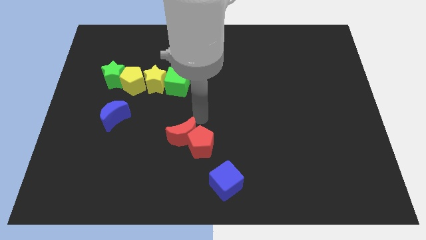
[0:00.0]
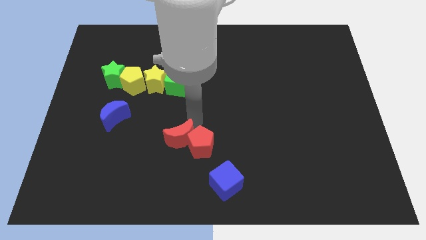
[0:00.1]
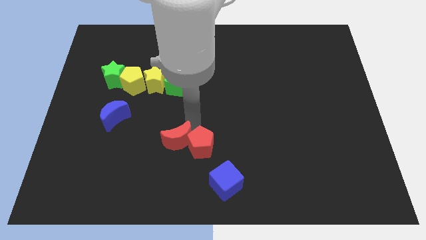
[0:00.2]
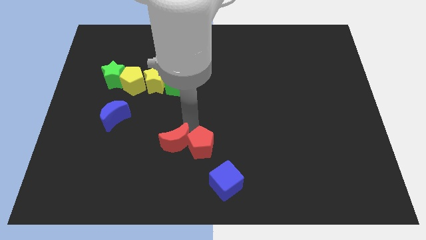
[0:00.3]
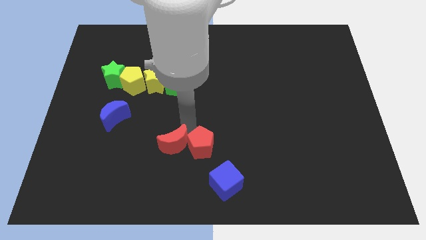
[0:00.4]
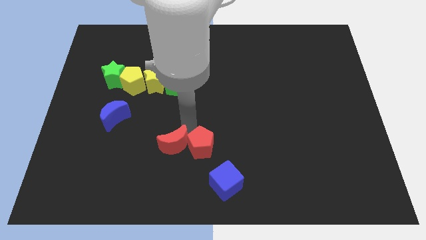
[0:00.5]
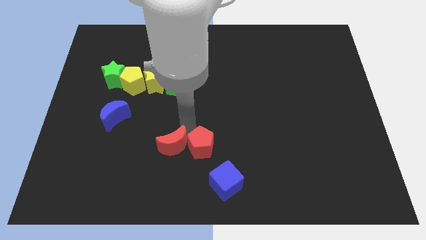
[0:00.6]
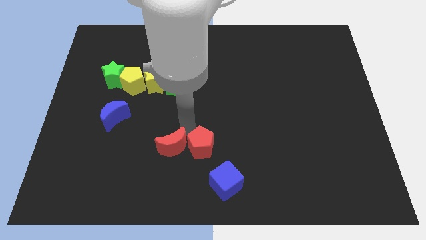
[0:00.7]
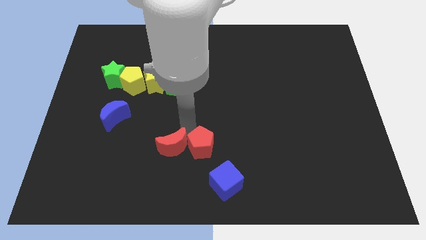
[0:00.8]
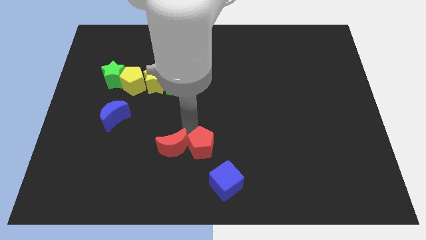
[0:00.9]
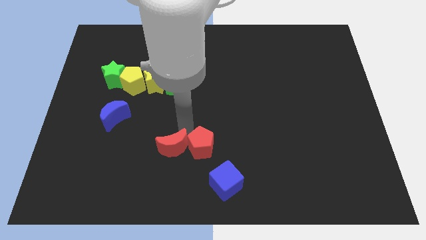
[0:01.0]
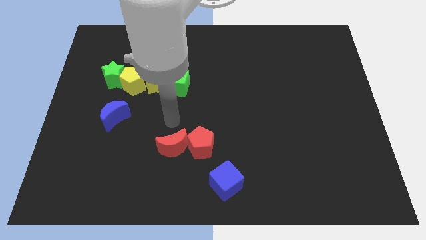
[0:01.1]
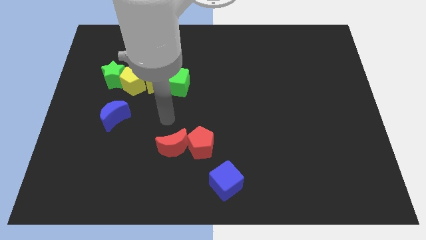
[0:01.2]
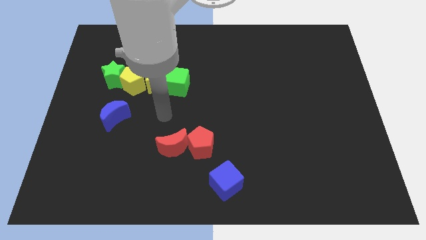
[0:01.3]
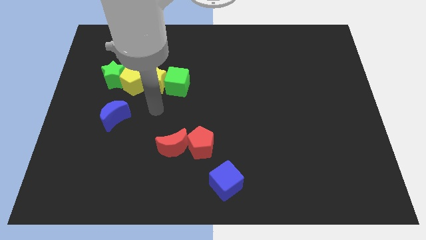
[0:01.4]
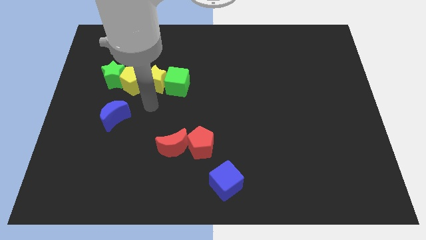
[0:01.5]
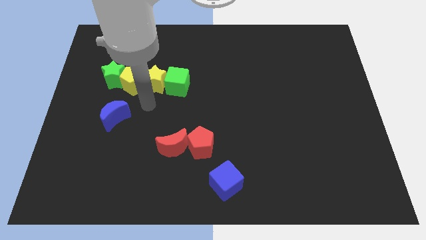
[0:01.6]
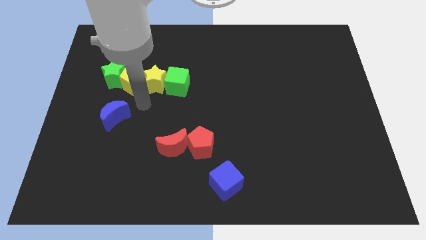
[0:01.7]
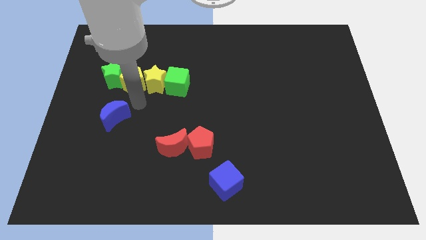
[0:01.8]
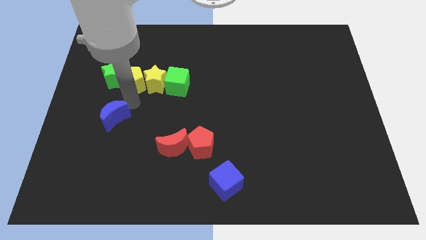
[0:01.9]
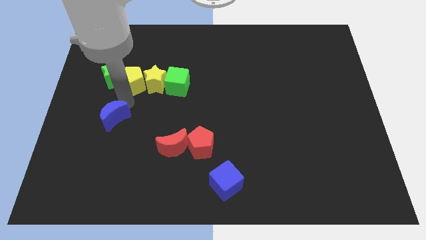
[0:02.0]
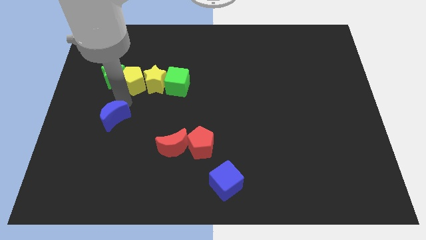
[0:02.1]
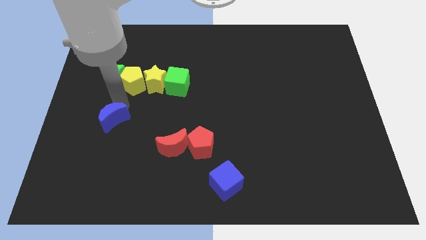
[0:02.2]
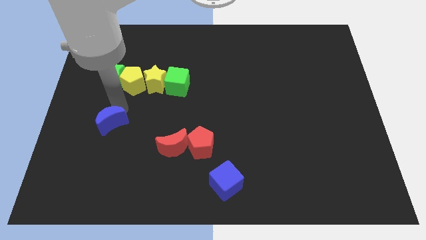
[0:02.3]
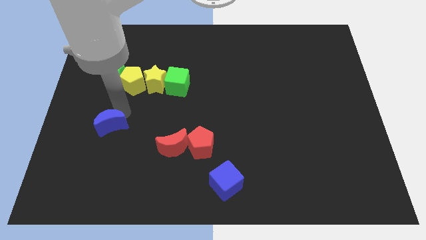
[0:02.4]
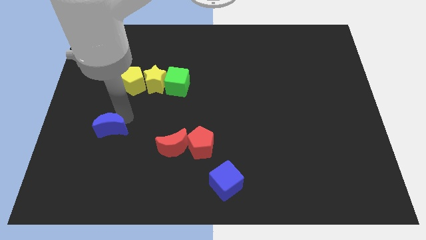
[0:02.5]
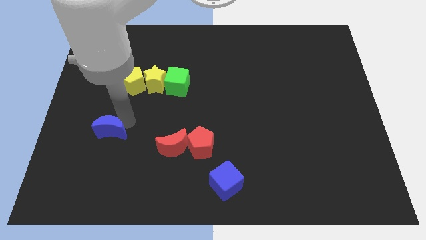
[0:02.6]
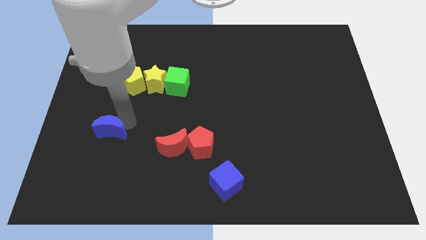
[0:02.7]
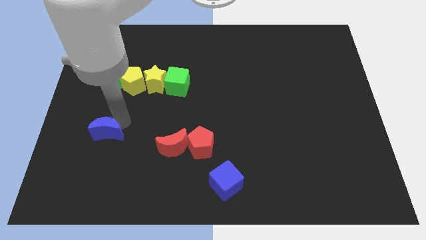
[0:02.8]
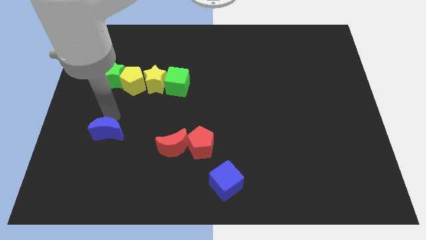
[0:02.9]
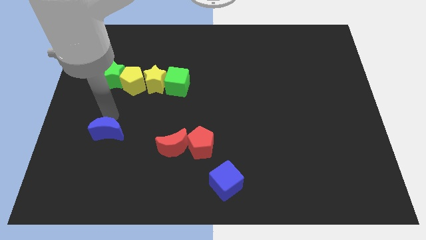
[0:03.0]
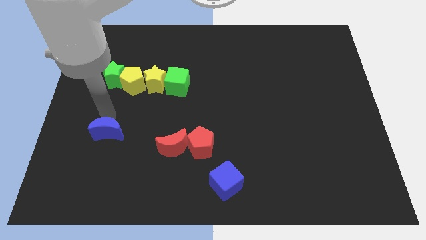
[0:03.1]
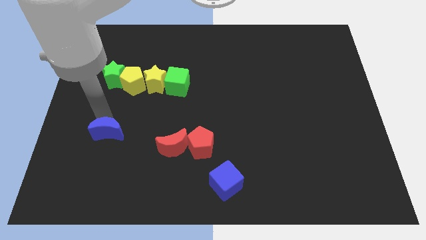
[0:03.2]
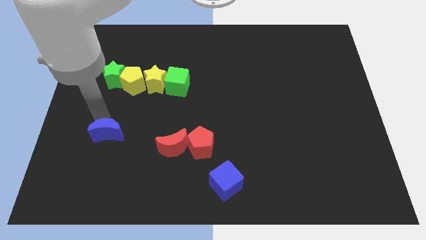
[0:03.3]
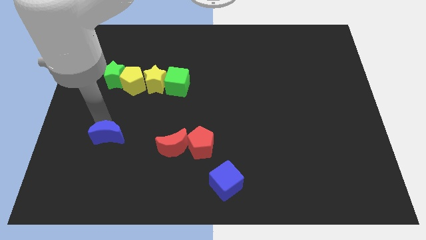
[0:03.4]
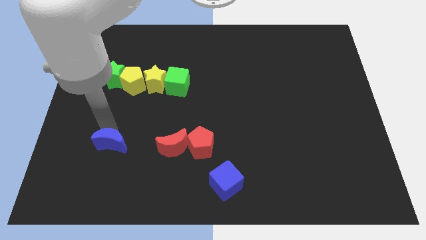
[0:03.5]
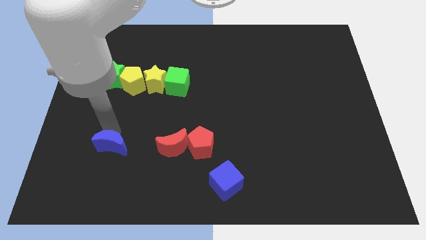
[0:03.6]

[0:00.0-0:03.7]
push both the crescent to the left side of the red pentagon

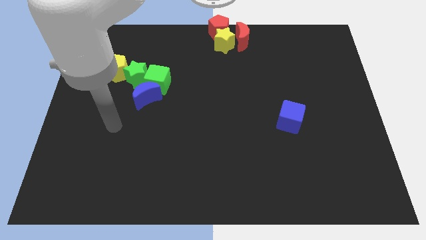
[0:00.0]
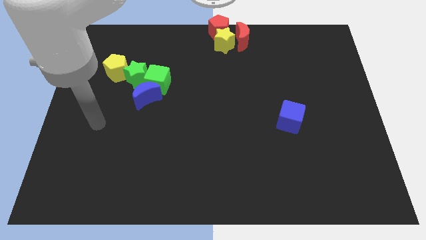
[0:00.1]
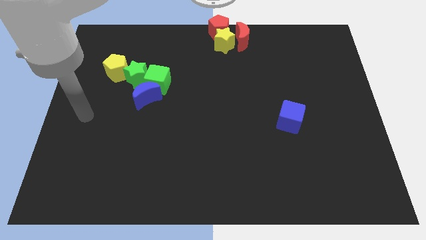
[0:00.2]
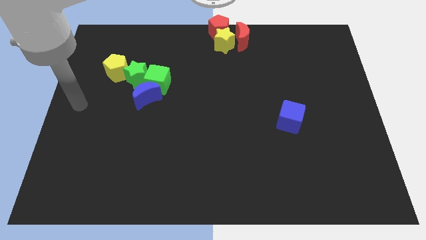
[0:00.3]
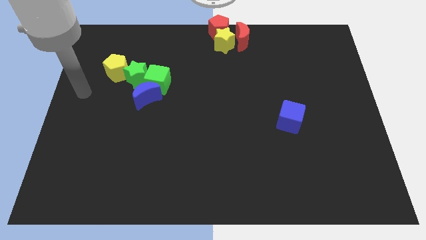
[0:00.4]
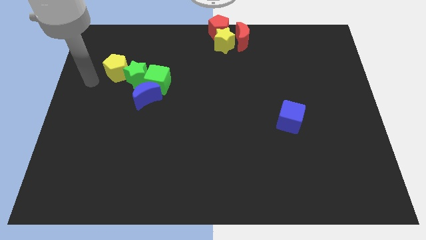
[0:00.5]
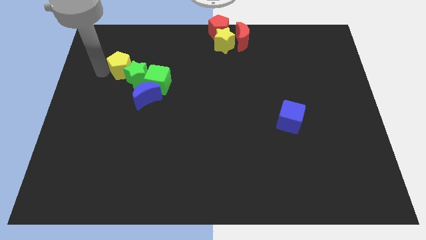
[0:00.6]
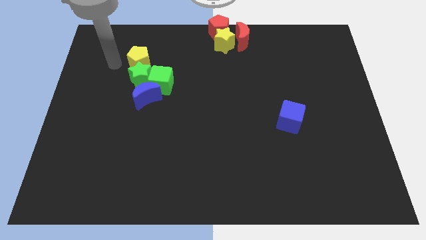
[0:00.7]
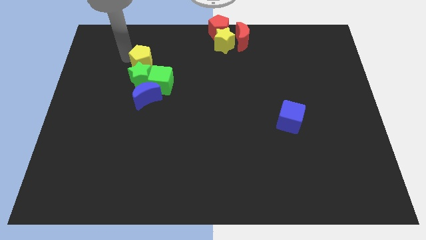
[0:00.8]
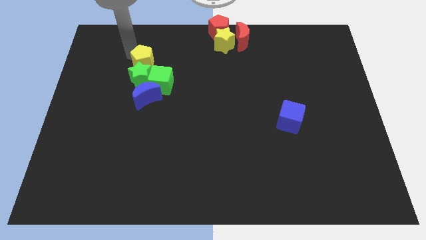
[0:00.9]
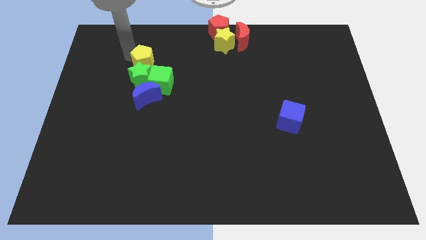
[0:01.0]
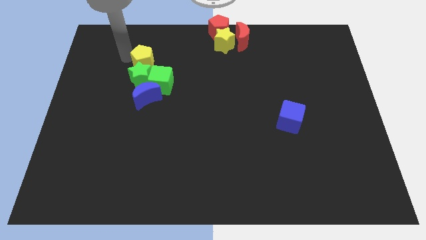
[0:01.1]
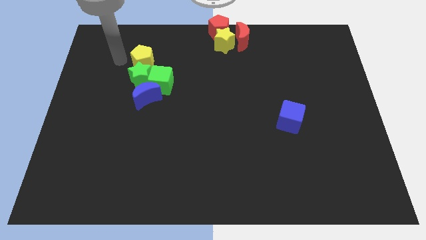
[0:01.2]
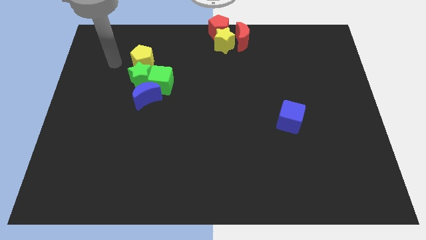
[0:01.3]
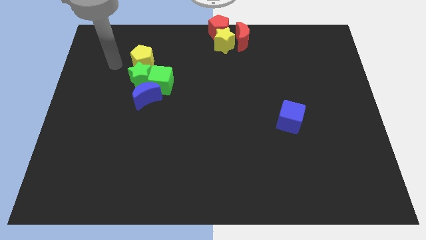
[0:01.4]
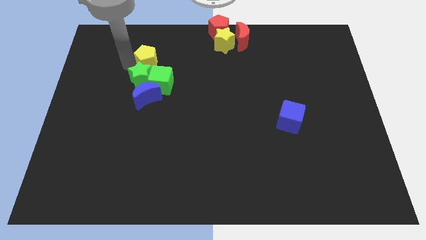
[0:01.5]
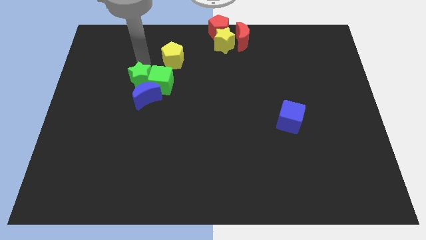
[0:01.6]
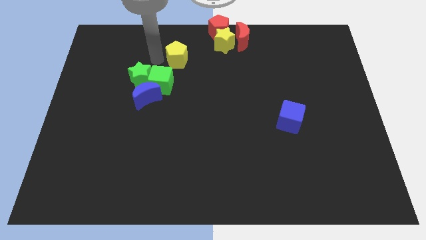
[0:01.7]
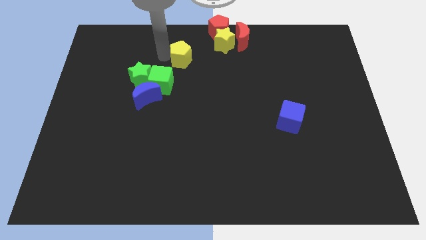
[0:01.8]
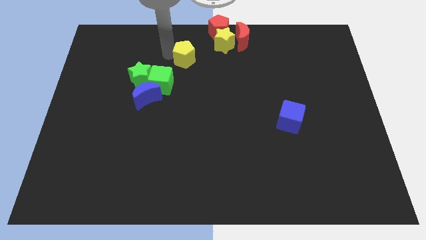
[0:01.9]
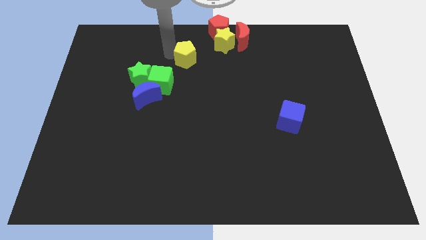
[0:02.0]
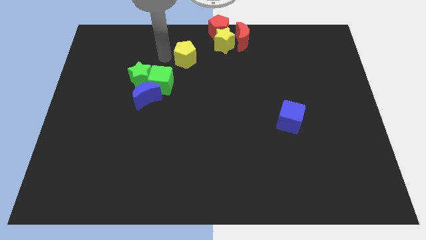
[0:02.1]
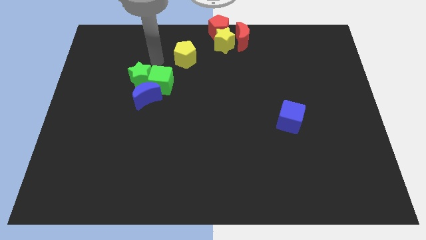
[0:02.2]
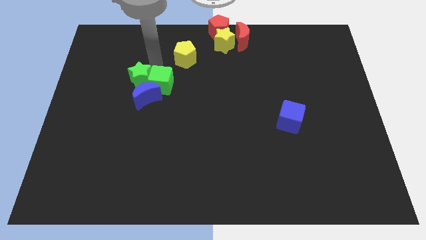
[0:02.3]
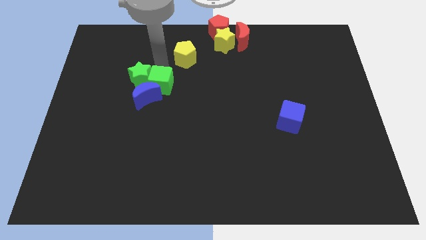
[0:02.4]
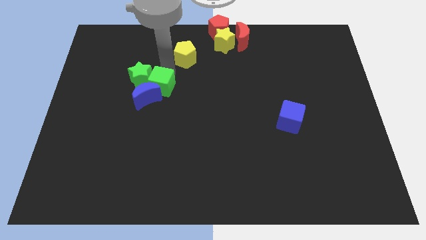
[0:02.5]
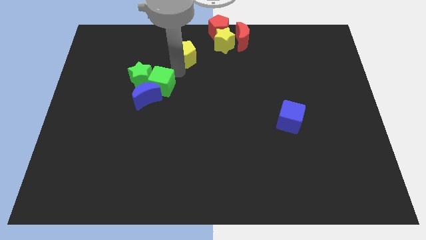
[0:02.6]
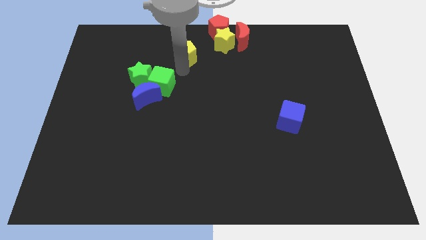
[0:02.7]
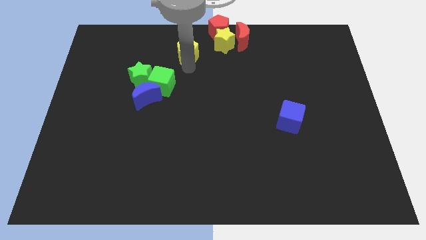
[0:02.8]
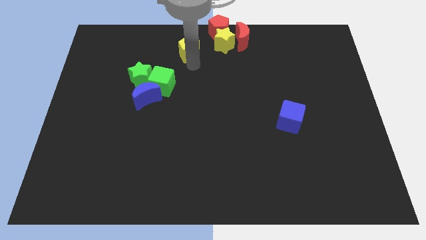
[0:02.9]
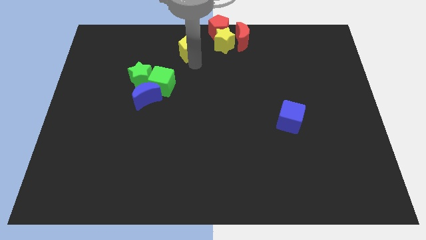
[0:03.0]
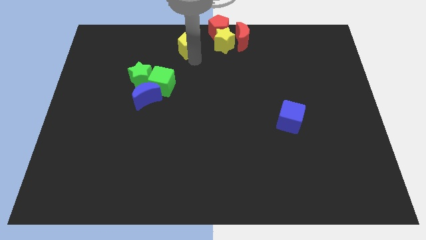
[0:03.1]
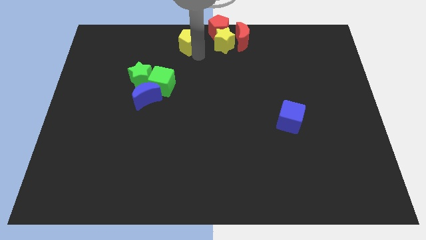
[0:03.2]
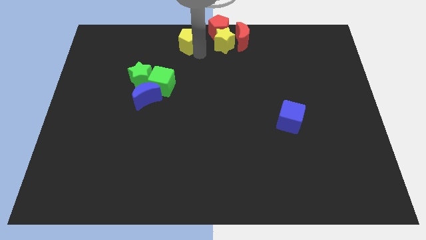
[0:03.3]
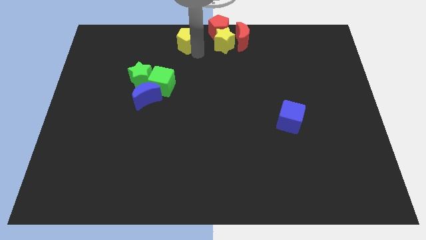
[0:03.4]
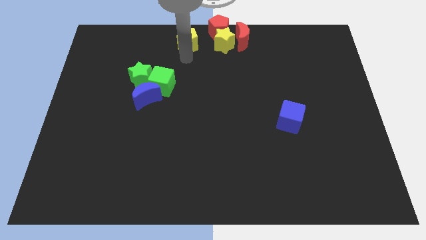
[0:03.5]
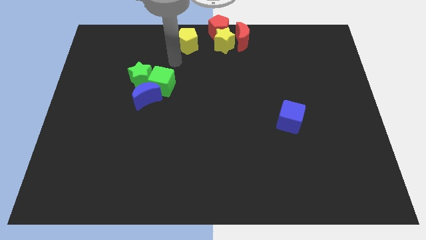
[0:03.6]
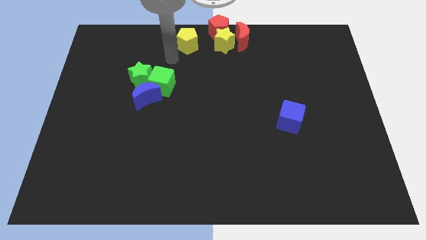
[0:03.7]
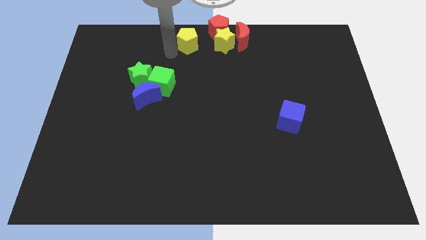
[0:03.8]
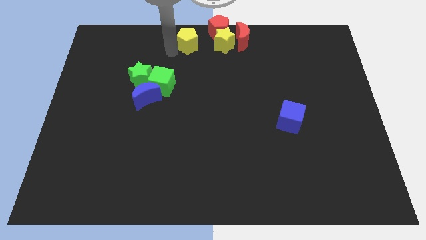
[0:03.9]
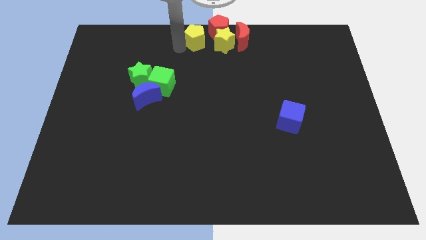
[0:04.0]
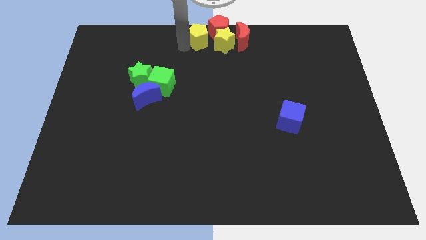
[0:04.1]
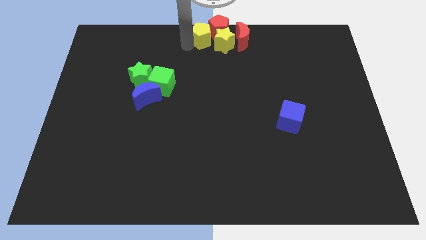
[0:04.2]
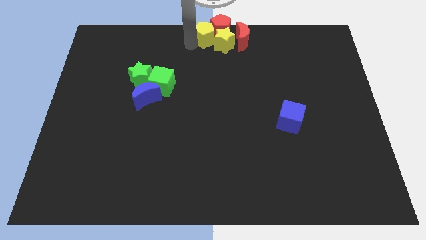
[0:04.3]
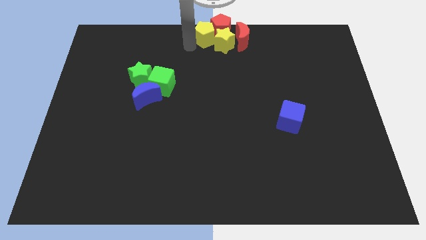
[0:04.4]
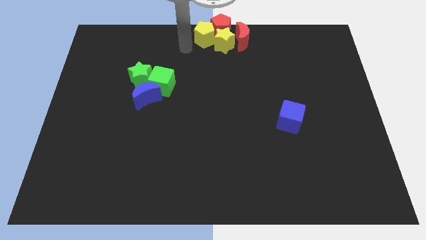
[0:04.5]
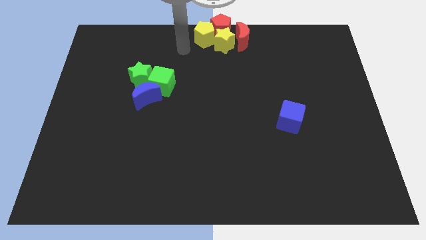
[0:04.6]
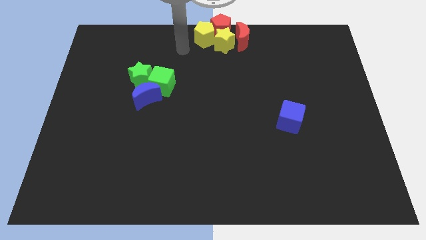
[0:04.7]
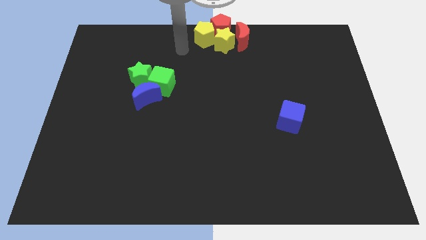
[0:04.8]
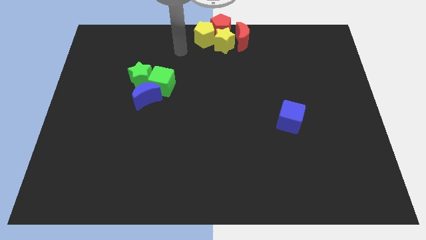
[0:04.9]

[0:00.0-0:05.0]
slide the yellow pentagon to the left side of the red pentagon

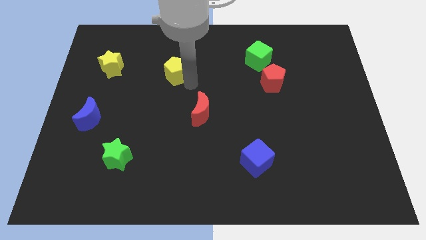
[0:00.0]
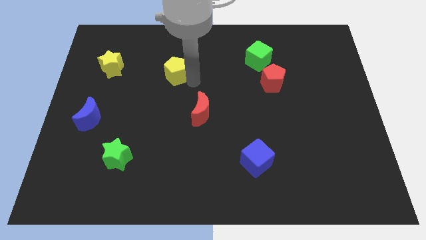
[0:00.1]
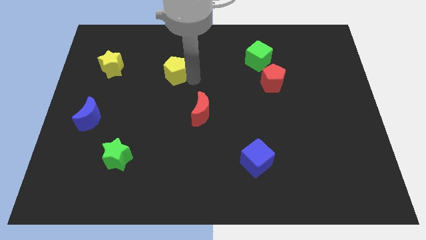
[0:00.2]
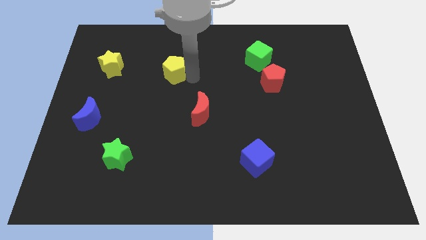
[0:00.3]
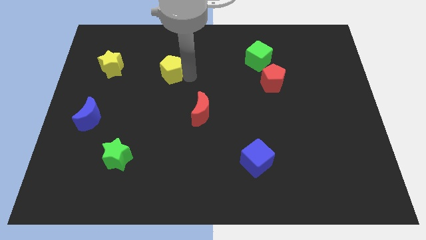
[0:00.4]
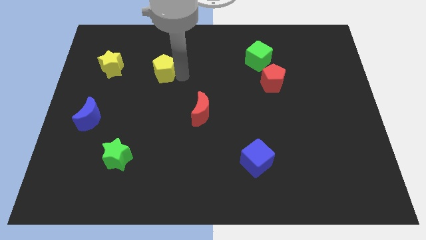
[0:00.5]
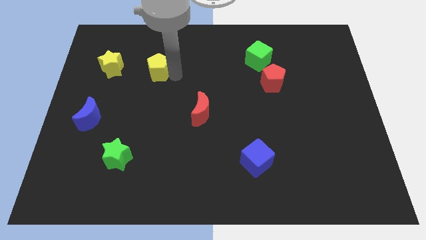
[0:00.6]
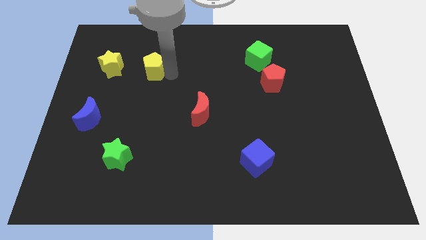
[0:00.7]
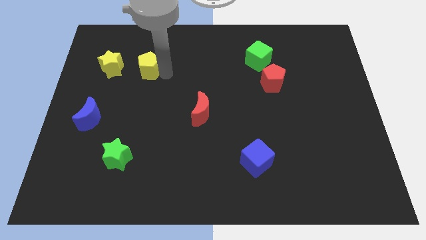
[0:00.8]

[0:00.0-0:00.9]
move the yellow pentagon to the parallel right of the yellow star
